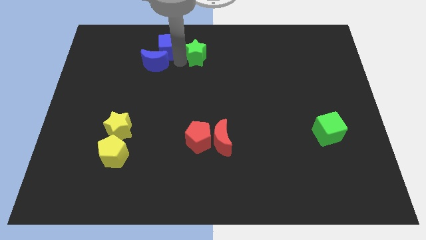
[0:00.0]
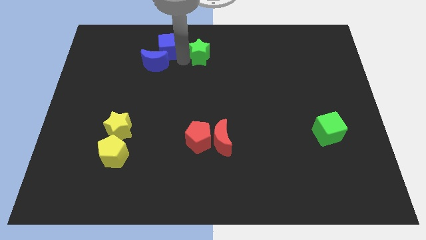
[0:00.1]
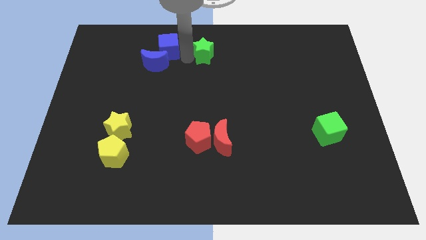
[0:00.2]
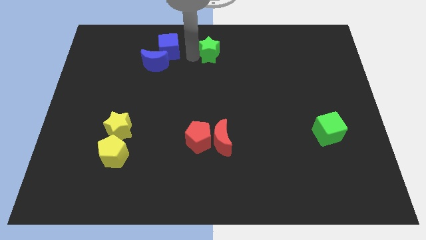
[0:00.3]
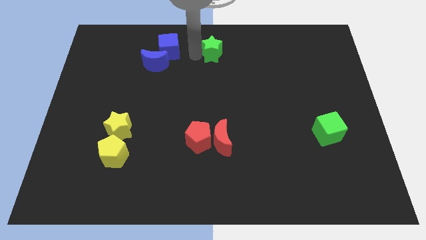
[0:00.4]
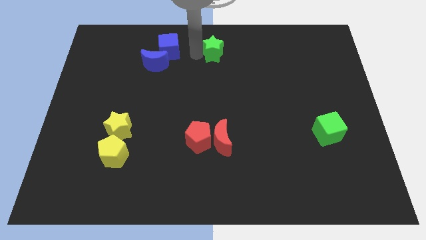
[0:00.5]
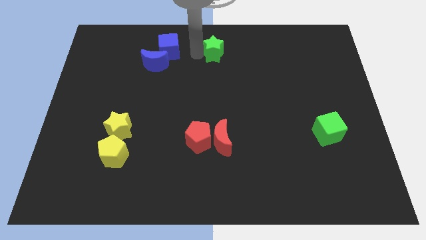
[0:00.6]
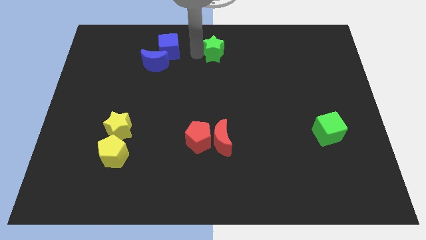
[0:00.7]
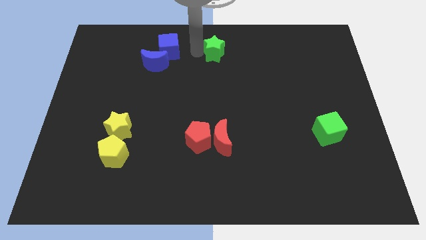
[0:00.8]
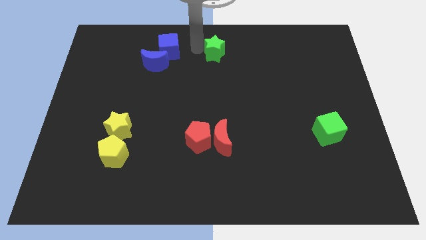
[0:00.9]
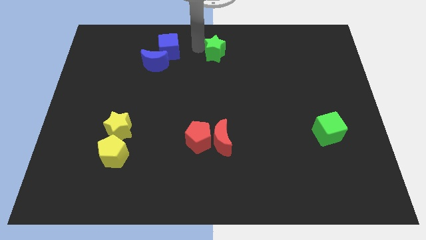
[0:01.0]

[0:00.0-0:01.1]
separate the green star from blue blocks

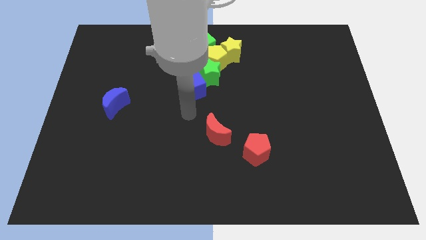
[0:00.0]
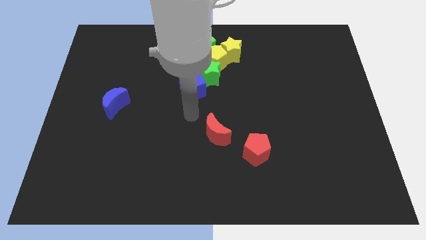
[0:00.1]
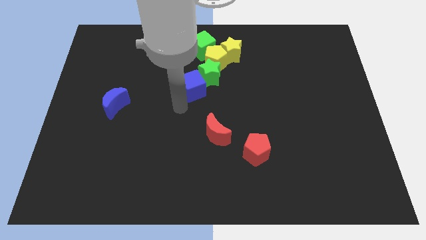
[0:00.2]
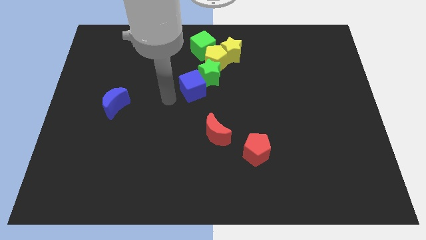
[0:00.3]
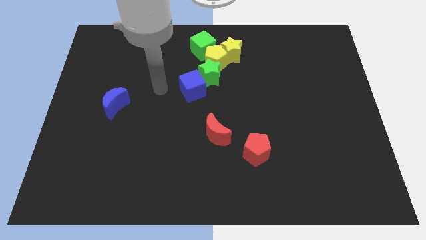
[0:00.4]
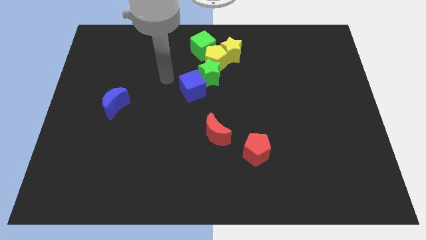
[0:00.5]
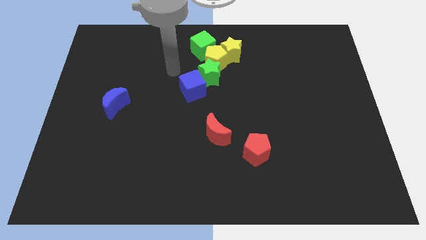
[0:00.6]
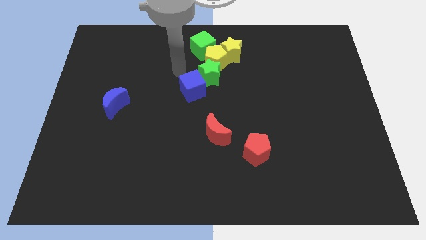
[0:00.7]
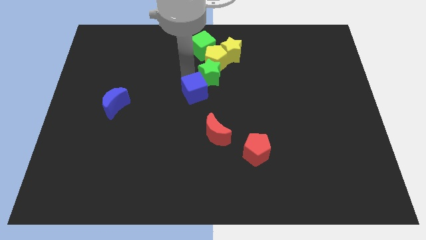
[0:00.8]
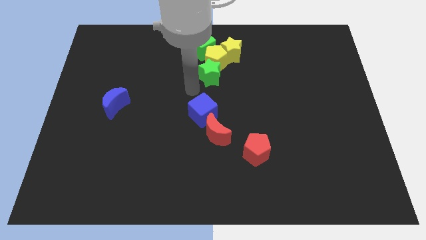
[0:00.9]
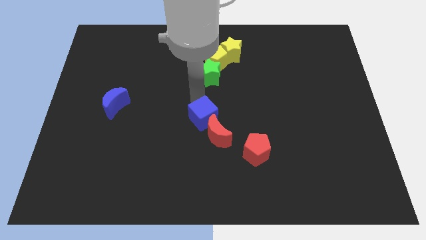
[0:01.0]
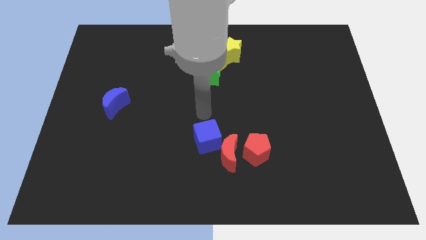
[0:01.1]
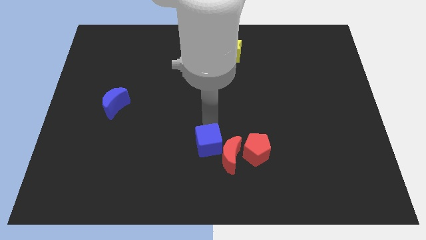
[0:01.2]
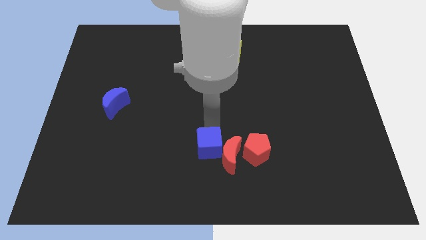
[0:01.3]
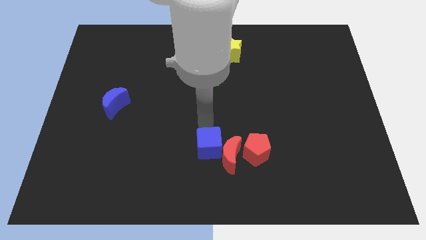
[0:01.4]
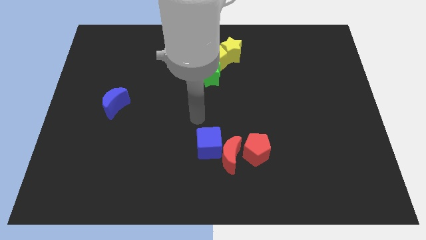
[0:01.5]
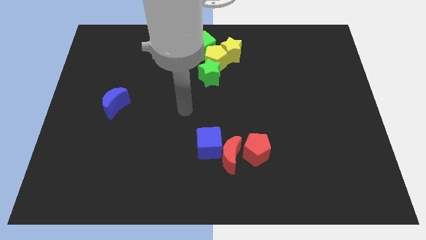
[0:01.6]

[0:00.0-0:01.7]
drag the blue cube and red moon to the left of red pentagon

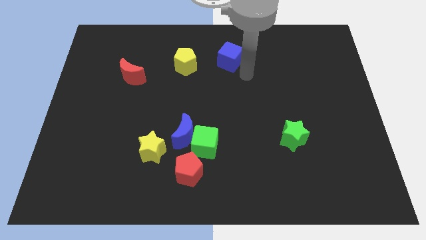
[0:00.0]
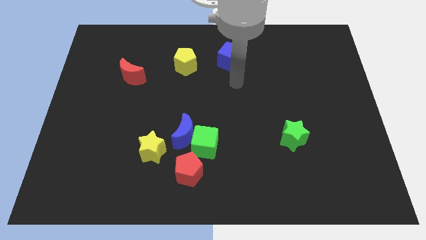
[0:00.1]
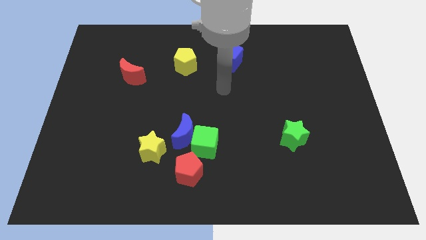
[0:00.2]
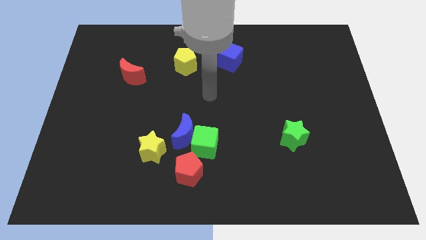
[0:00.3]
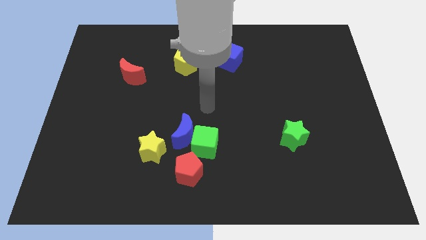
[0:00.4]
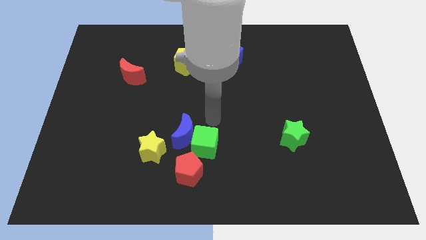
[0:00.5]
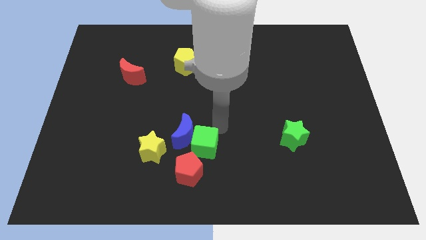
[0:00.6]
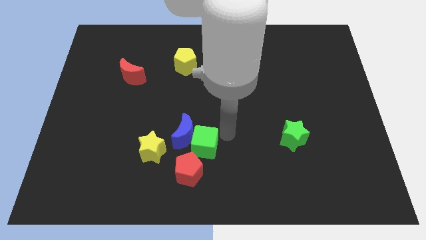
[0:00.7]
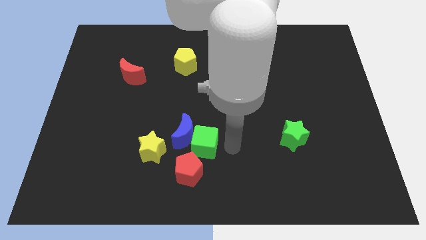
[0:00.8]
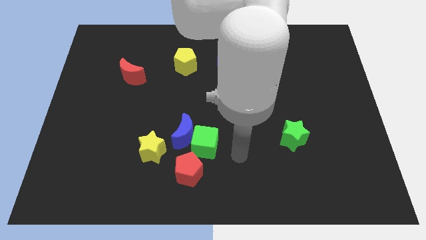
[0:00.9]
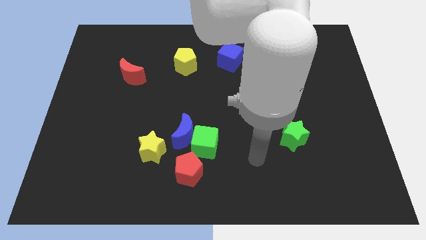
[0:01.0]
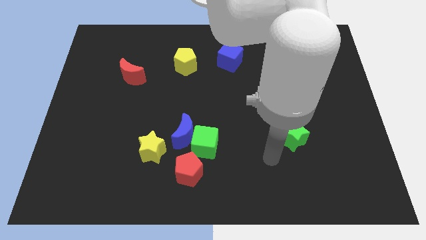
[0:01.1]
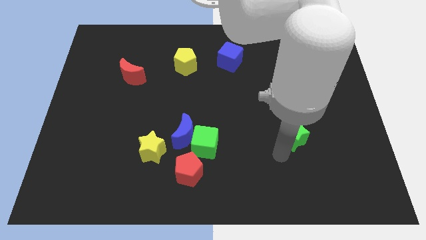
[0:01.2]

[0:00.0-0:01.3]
point your arm to the bottom left side of the green star

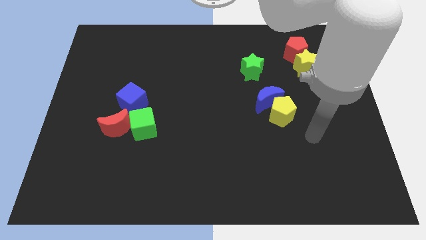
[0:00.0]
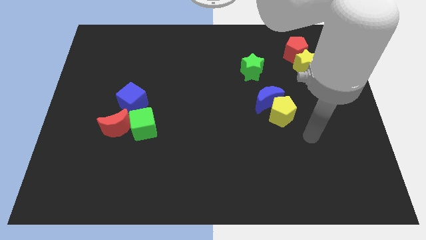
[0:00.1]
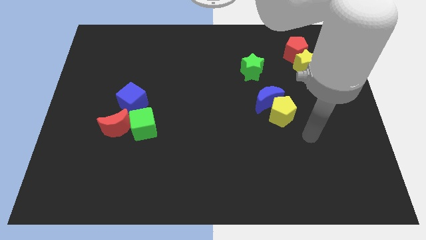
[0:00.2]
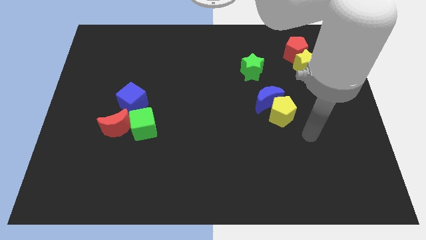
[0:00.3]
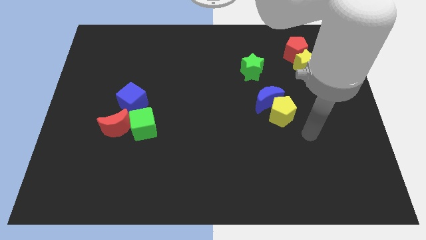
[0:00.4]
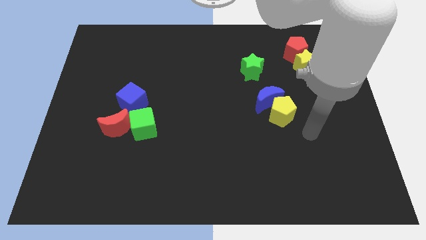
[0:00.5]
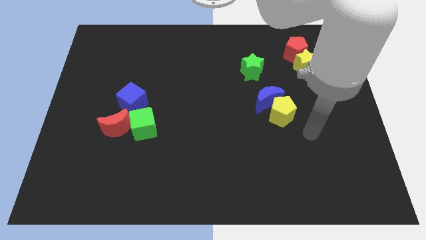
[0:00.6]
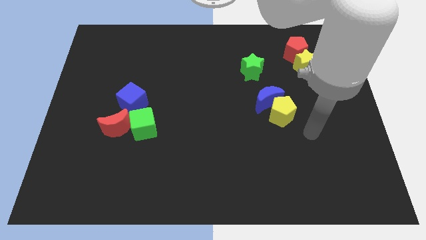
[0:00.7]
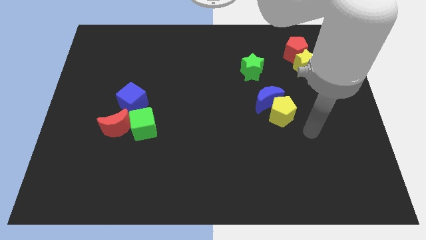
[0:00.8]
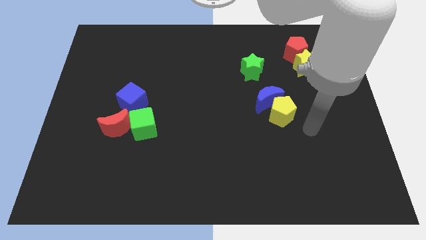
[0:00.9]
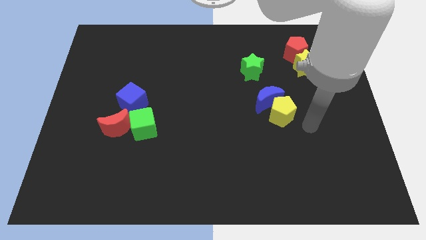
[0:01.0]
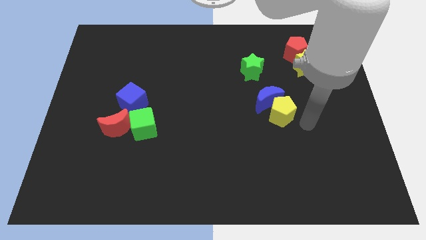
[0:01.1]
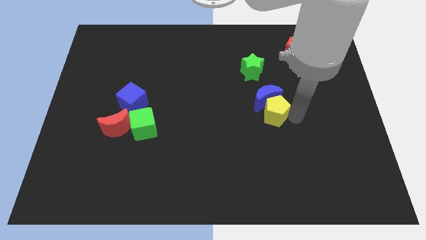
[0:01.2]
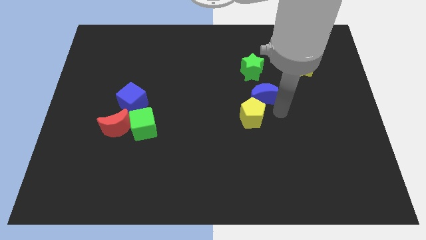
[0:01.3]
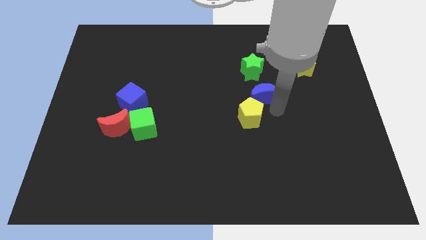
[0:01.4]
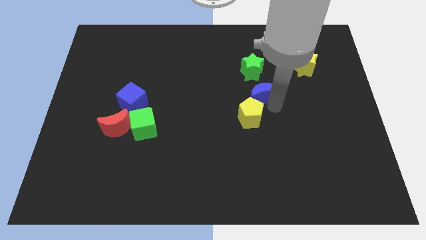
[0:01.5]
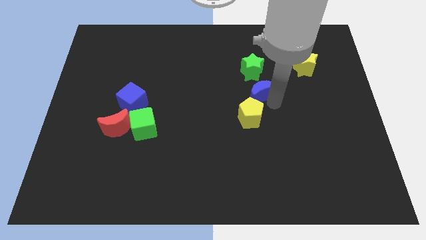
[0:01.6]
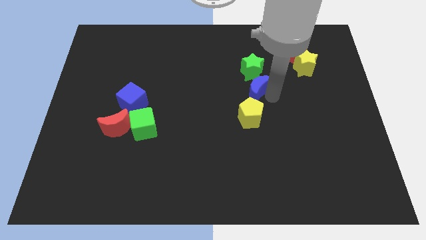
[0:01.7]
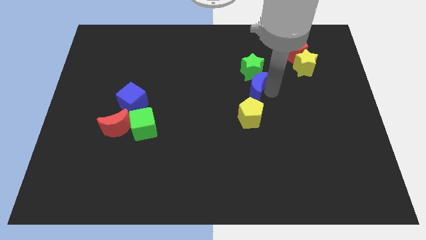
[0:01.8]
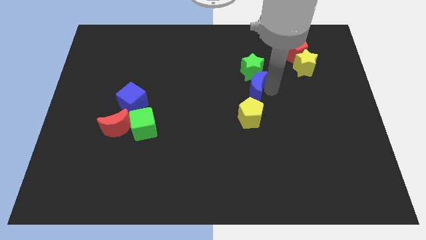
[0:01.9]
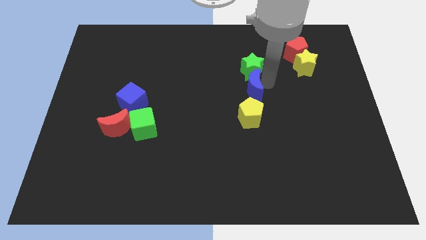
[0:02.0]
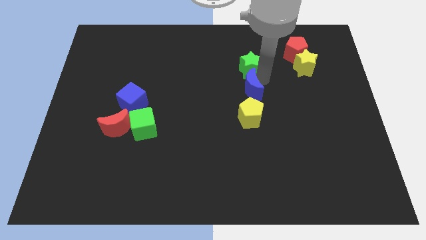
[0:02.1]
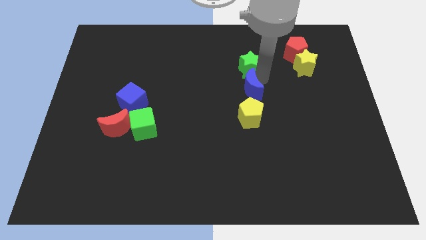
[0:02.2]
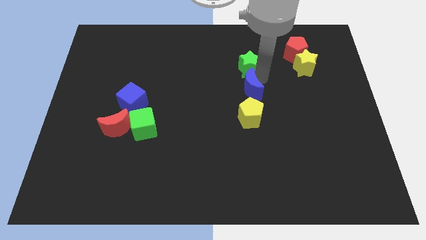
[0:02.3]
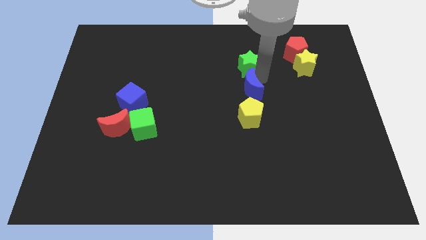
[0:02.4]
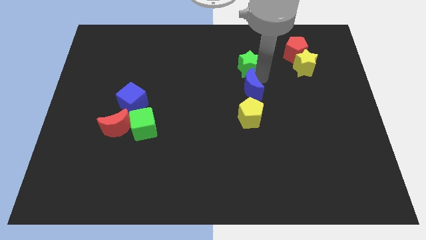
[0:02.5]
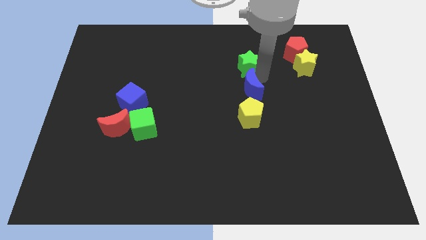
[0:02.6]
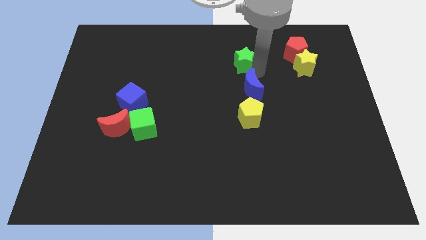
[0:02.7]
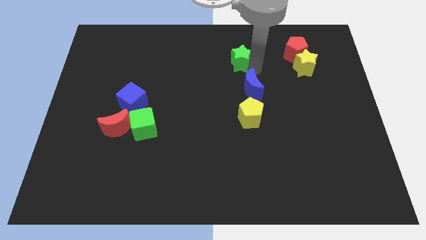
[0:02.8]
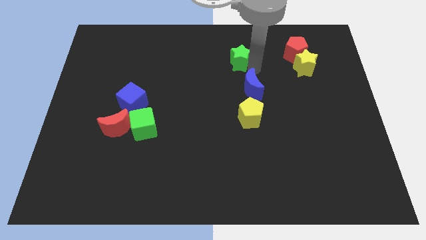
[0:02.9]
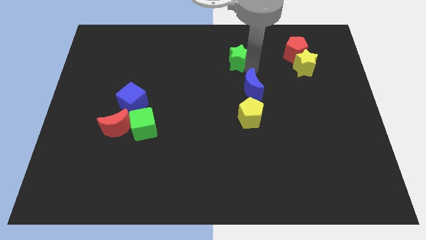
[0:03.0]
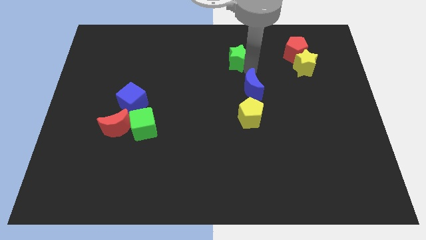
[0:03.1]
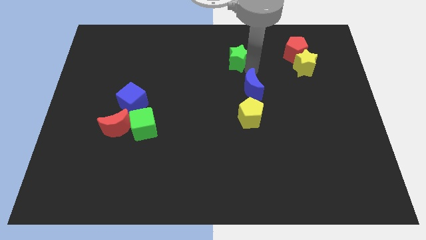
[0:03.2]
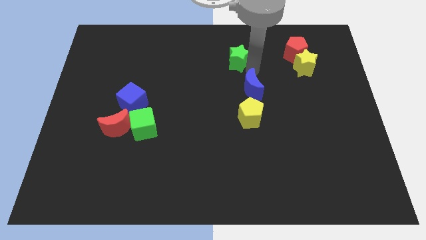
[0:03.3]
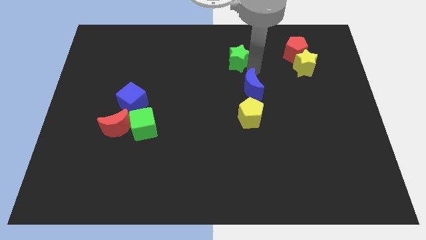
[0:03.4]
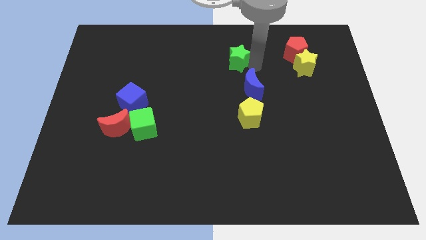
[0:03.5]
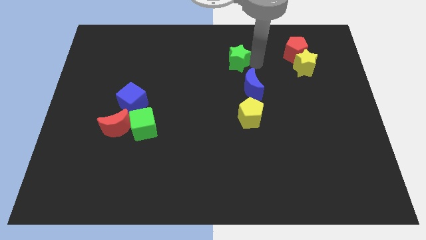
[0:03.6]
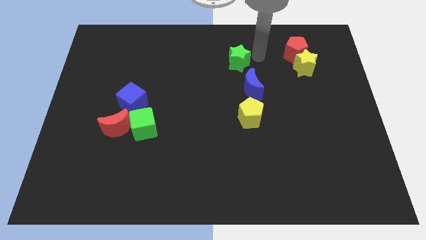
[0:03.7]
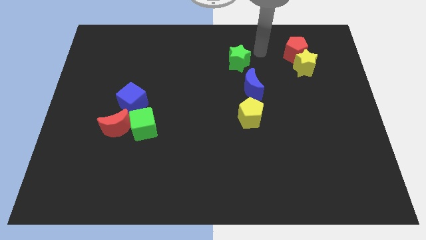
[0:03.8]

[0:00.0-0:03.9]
place your arm in between green star and red pentagon

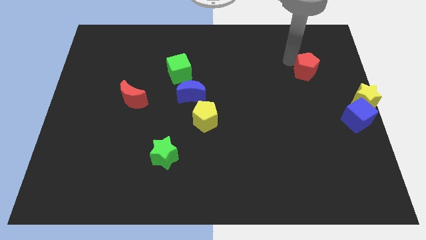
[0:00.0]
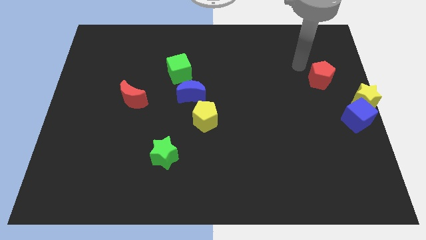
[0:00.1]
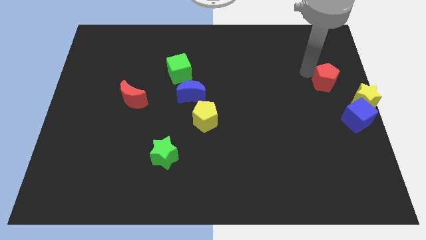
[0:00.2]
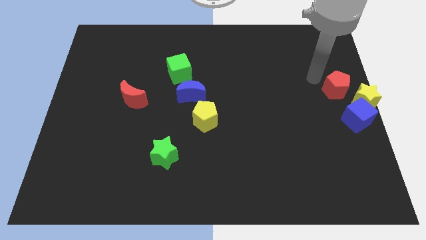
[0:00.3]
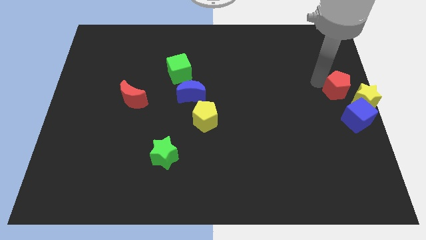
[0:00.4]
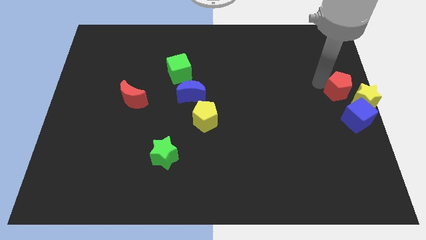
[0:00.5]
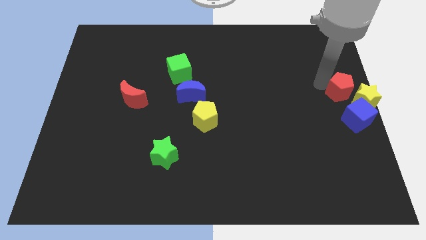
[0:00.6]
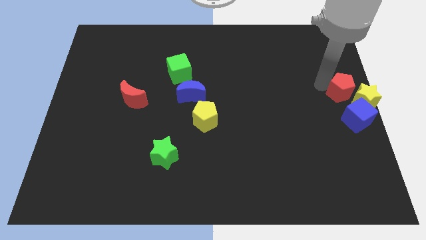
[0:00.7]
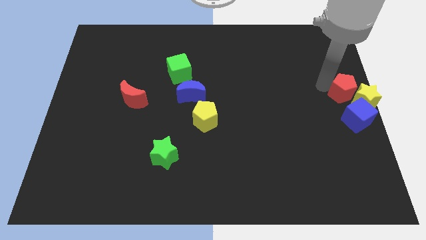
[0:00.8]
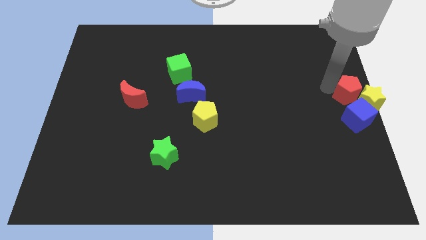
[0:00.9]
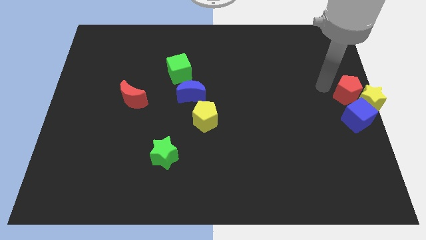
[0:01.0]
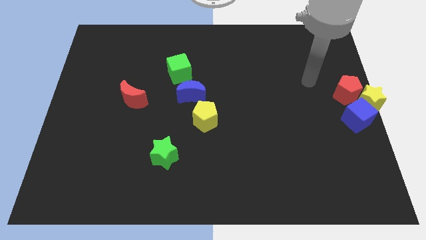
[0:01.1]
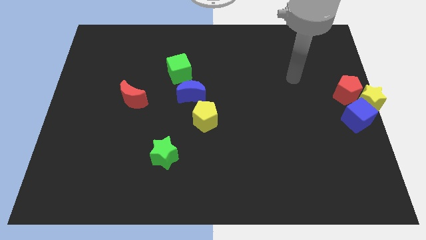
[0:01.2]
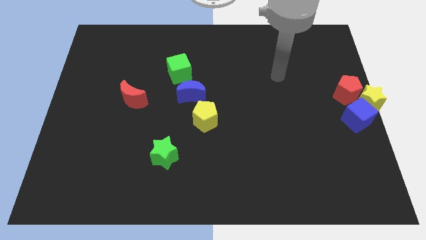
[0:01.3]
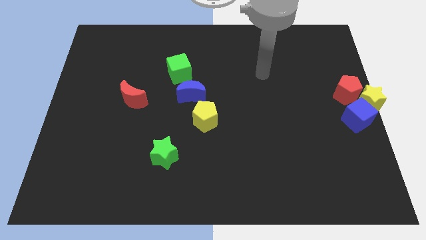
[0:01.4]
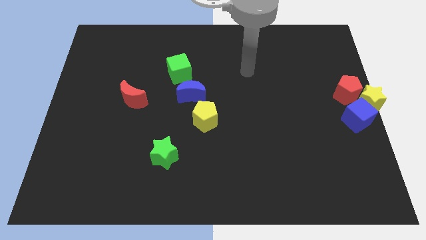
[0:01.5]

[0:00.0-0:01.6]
move the red pentagon into the yellow star
